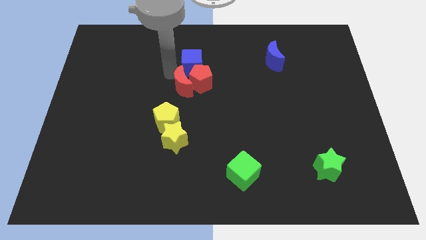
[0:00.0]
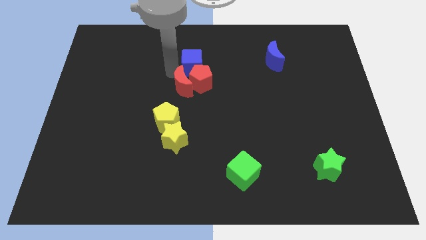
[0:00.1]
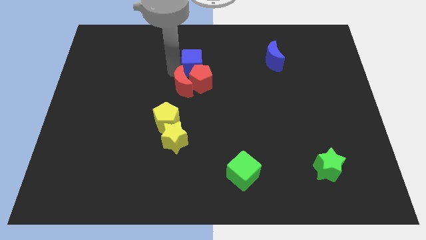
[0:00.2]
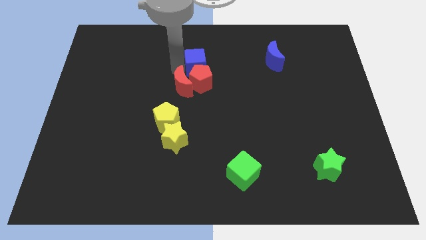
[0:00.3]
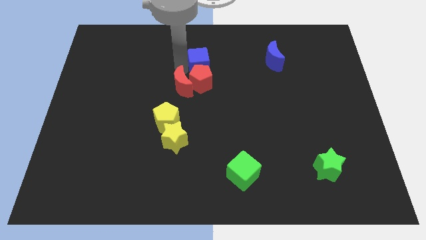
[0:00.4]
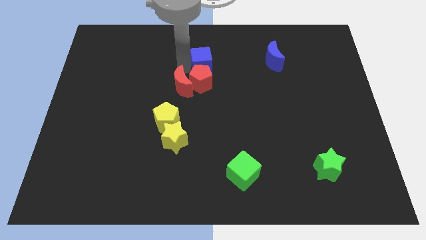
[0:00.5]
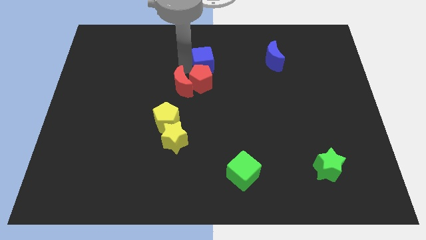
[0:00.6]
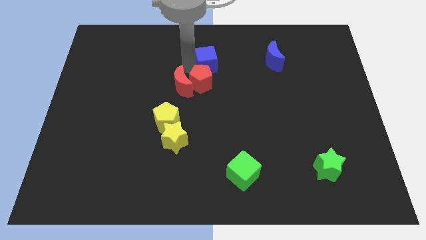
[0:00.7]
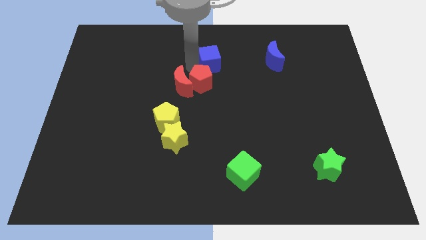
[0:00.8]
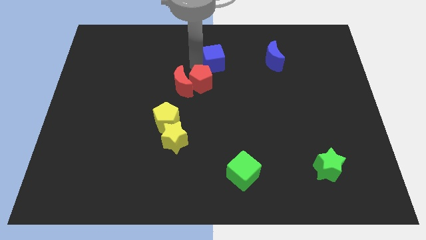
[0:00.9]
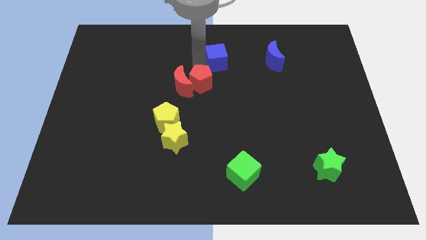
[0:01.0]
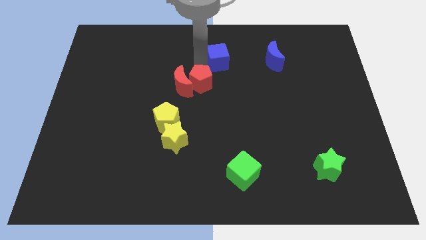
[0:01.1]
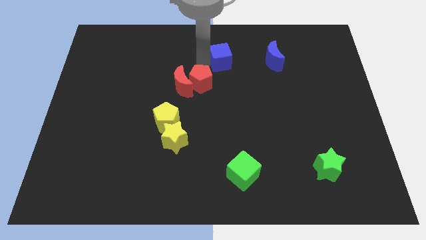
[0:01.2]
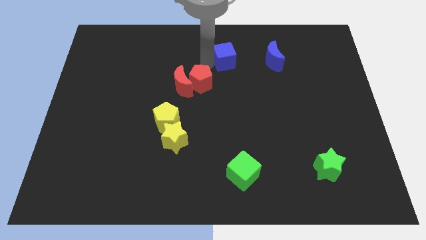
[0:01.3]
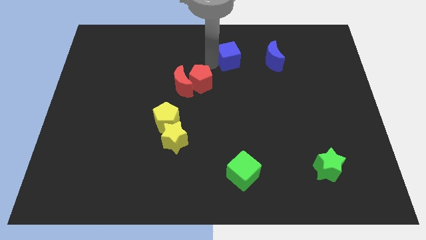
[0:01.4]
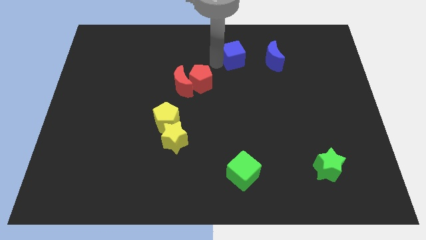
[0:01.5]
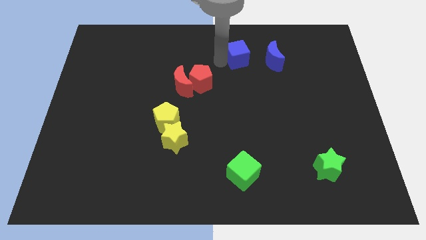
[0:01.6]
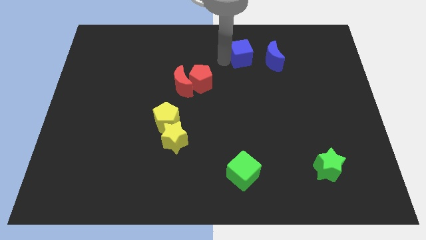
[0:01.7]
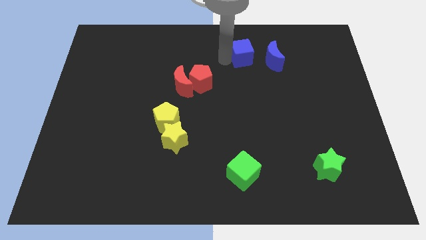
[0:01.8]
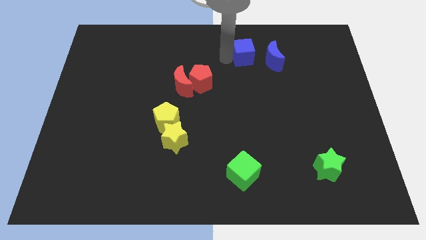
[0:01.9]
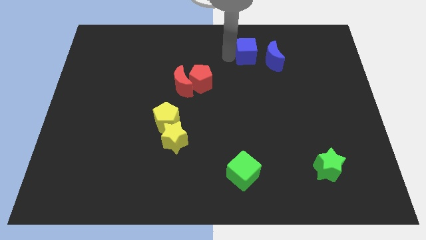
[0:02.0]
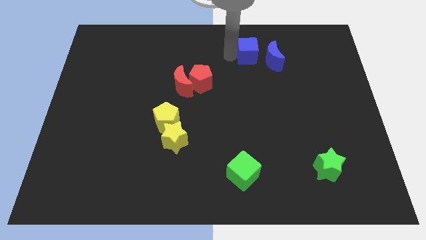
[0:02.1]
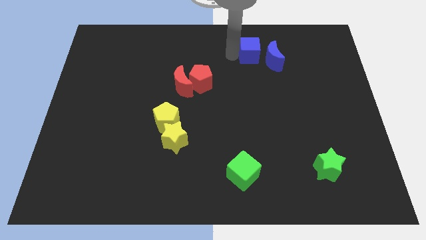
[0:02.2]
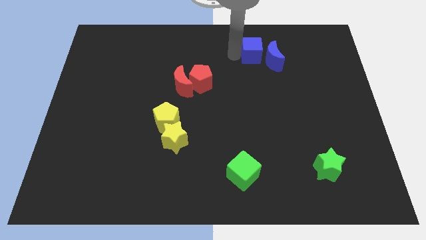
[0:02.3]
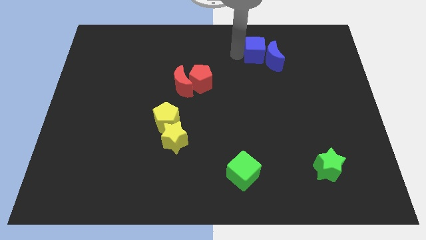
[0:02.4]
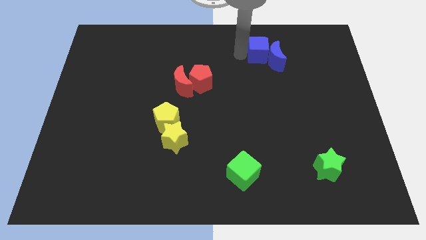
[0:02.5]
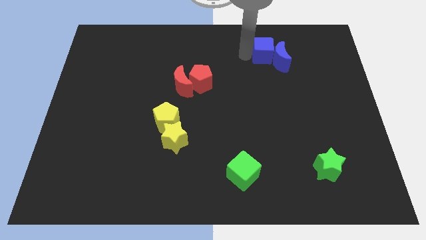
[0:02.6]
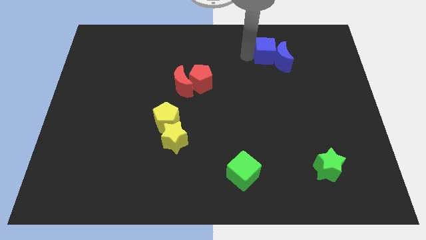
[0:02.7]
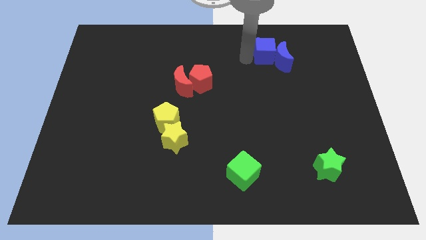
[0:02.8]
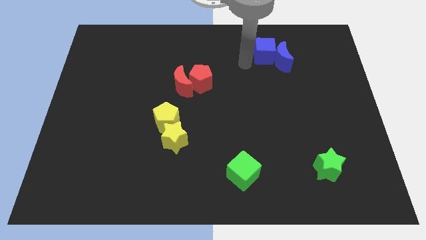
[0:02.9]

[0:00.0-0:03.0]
place the blue cube to the left of blue crescent

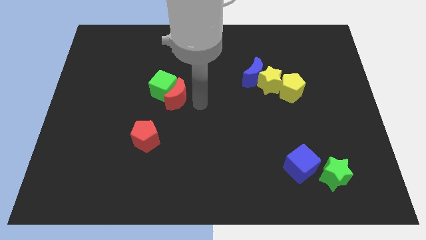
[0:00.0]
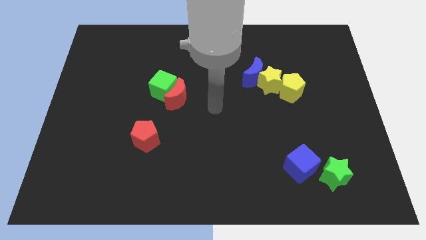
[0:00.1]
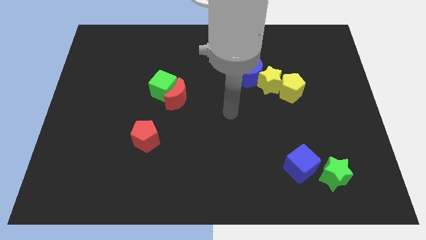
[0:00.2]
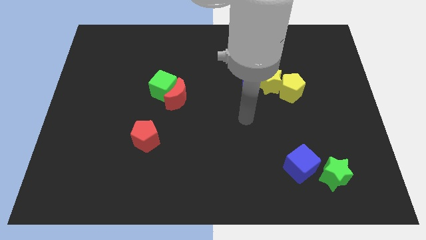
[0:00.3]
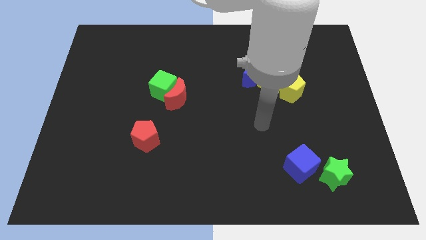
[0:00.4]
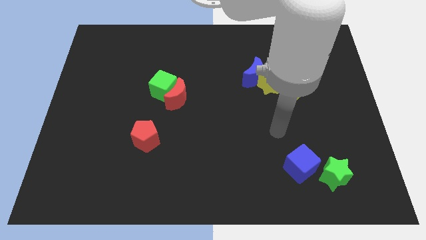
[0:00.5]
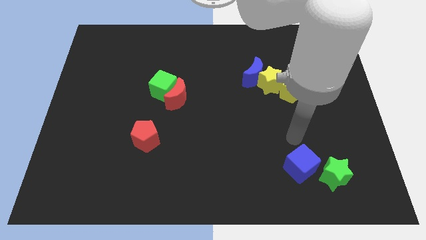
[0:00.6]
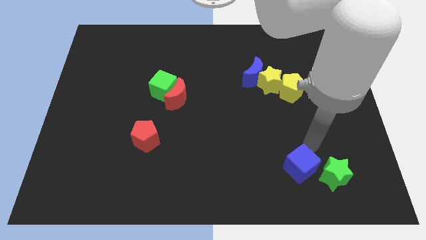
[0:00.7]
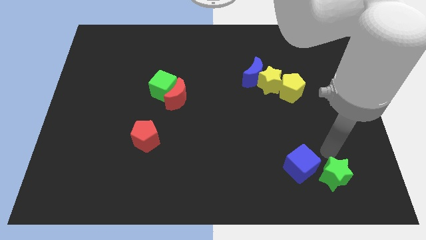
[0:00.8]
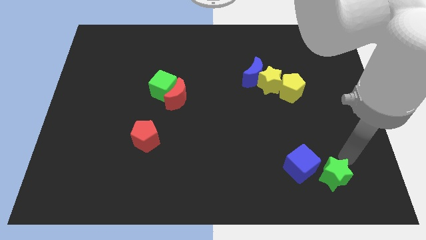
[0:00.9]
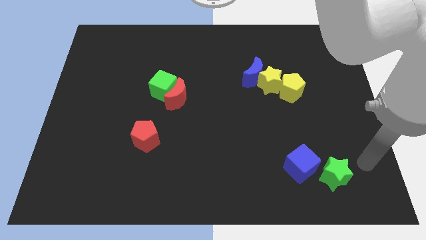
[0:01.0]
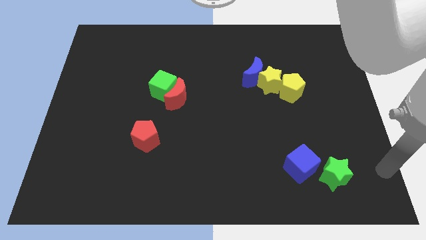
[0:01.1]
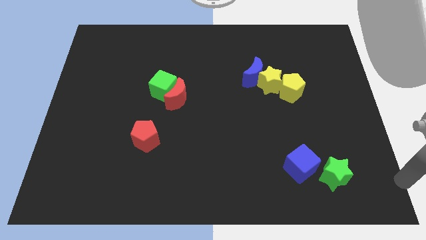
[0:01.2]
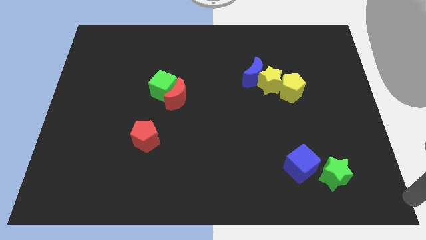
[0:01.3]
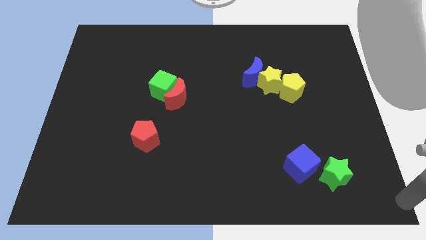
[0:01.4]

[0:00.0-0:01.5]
move your arm towards the bottom right on the board

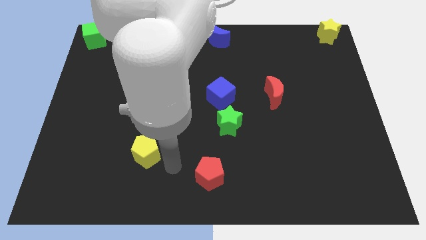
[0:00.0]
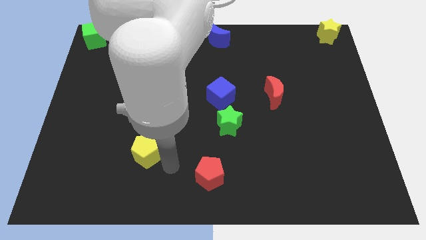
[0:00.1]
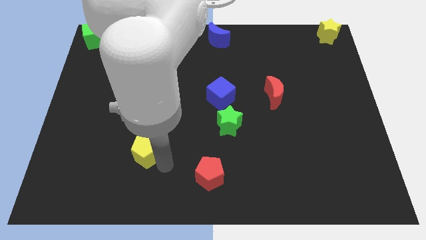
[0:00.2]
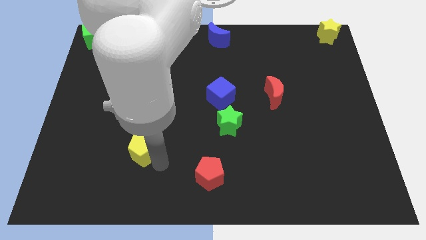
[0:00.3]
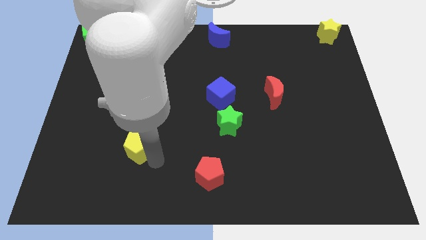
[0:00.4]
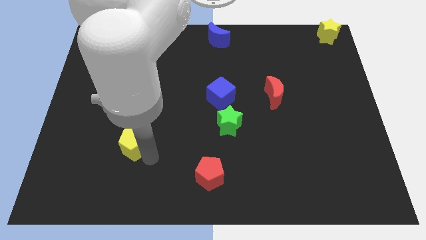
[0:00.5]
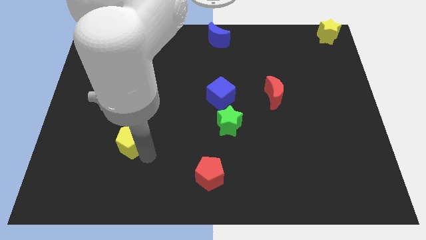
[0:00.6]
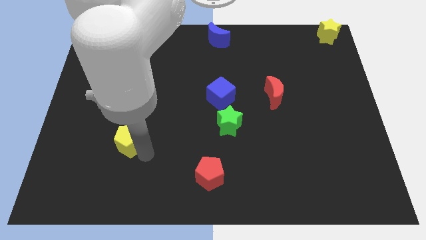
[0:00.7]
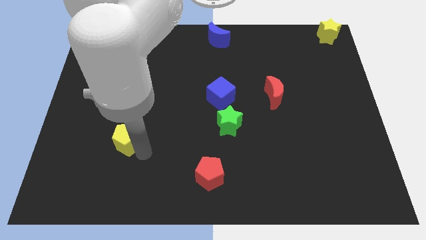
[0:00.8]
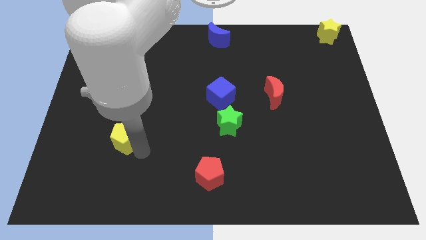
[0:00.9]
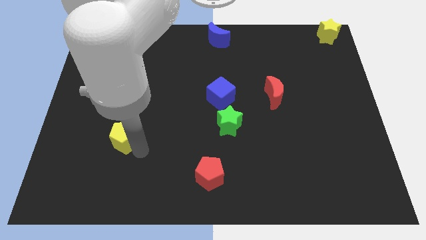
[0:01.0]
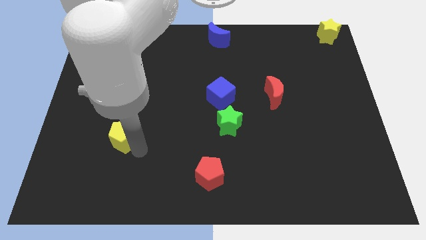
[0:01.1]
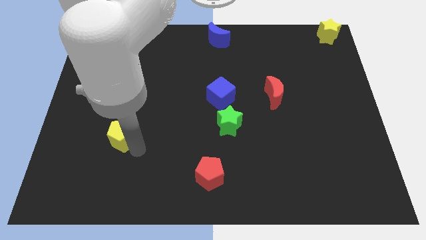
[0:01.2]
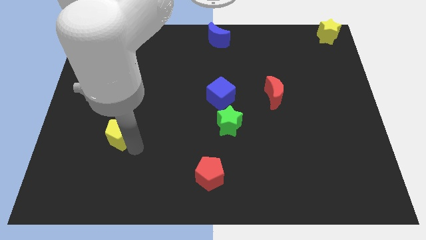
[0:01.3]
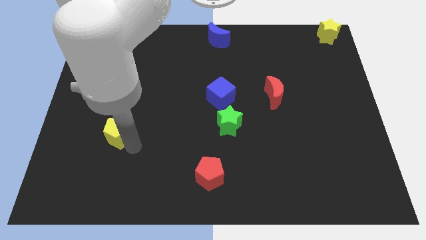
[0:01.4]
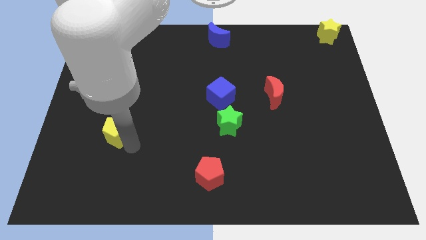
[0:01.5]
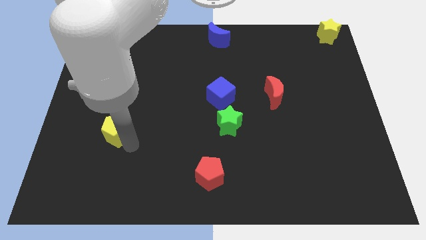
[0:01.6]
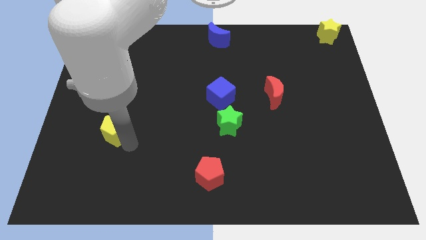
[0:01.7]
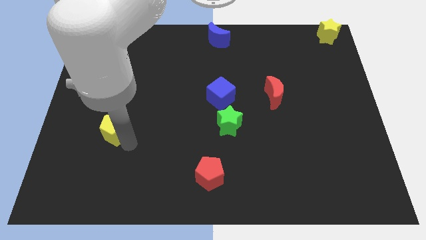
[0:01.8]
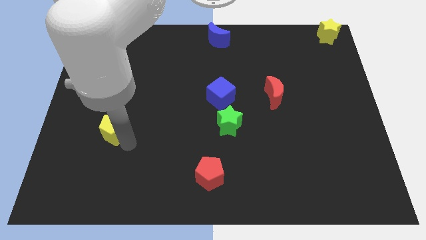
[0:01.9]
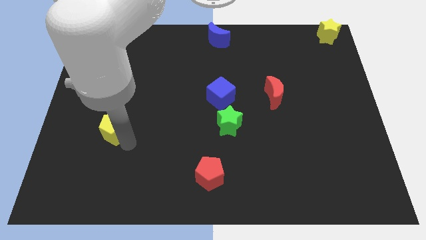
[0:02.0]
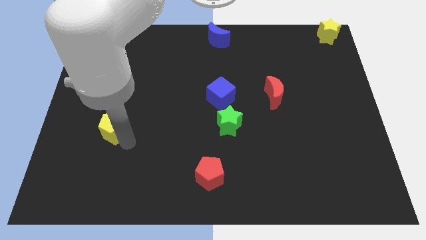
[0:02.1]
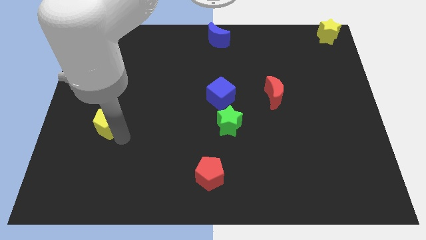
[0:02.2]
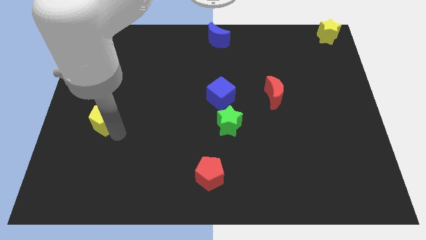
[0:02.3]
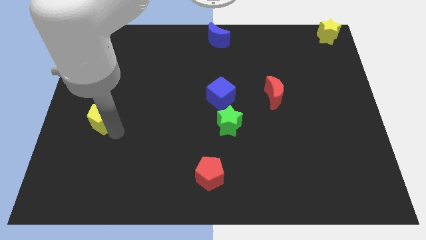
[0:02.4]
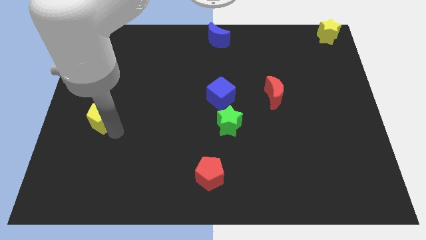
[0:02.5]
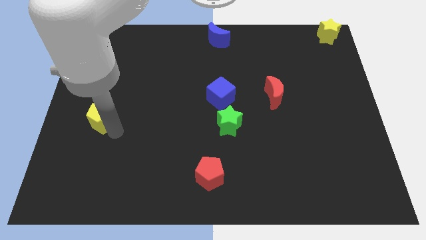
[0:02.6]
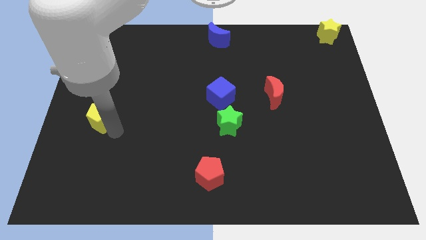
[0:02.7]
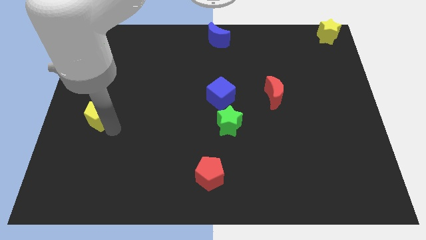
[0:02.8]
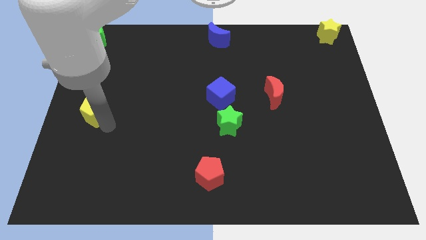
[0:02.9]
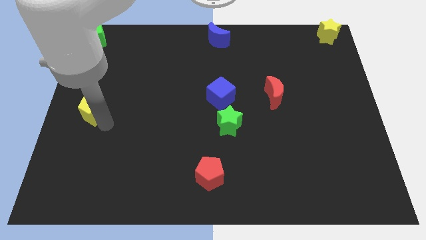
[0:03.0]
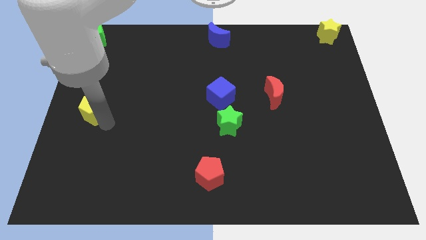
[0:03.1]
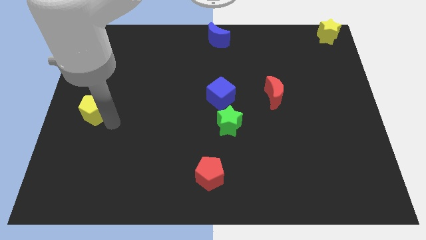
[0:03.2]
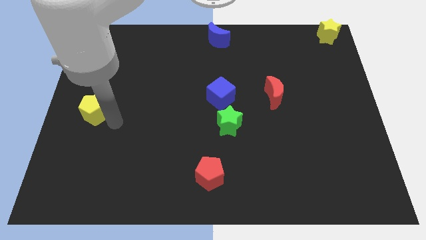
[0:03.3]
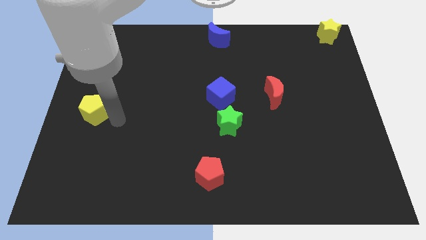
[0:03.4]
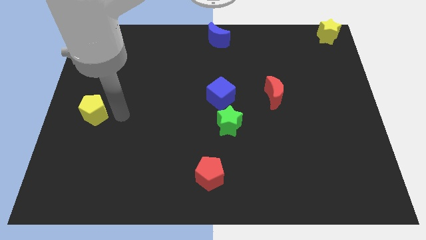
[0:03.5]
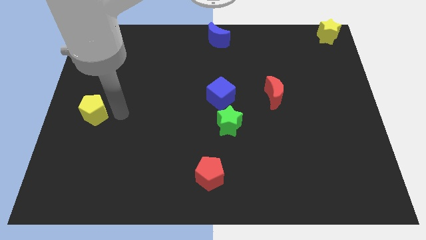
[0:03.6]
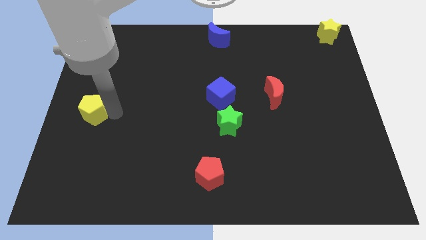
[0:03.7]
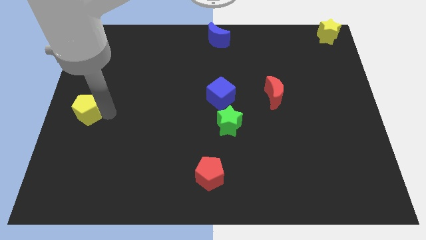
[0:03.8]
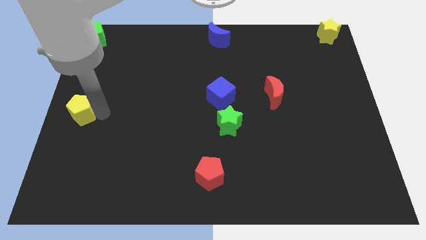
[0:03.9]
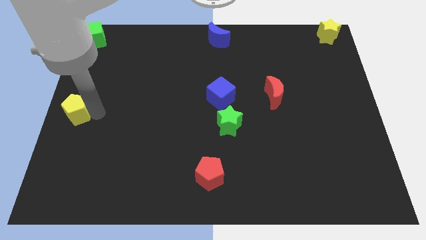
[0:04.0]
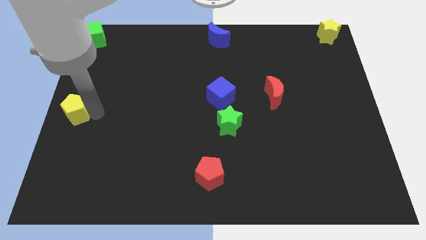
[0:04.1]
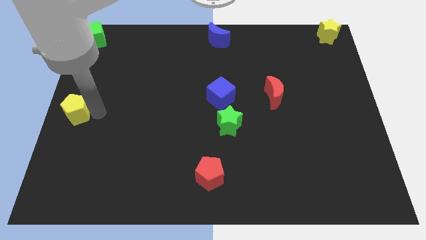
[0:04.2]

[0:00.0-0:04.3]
move the yellow pentagon below the green cube vertically at left
